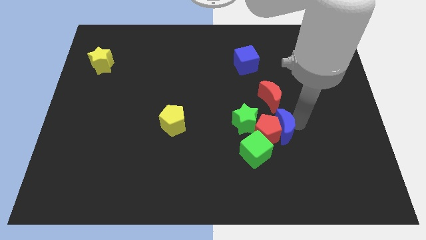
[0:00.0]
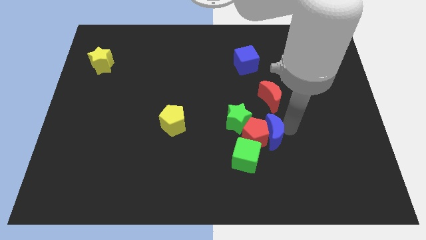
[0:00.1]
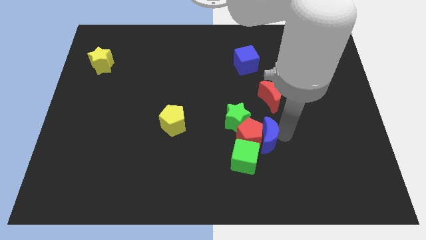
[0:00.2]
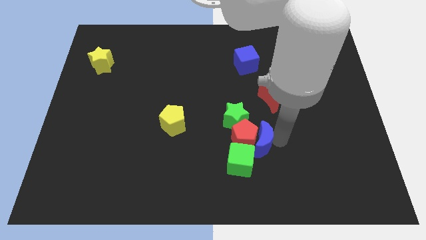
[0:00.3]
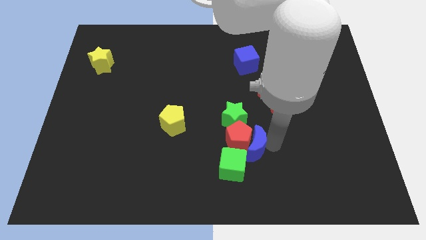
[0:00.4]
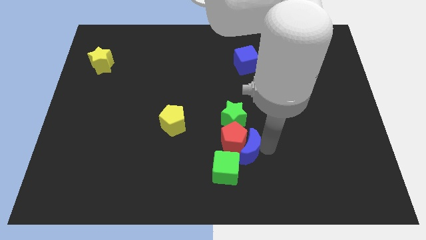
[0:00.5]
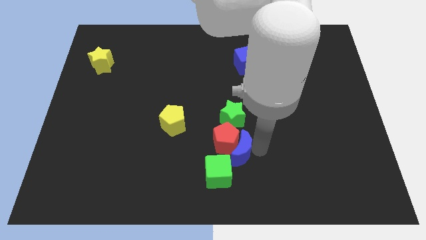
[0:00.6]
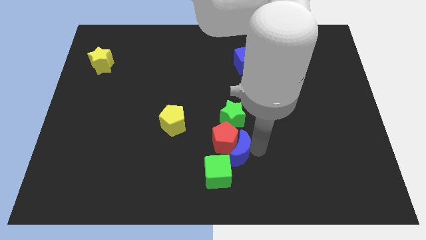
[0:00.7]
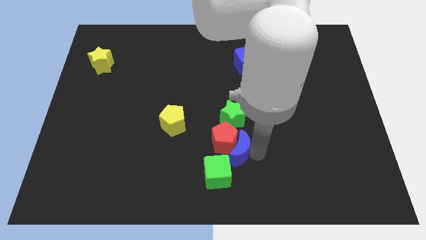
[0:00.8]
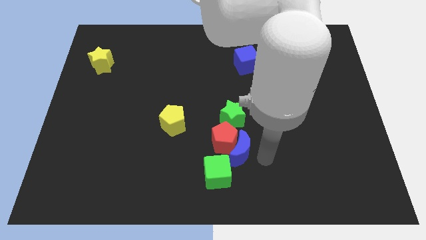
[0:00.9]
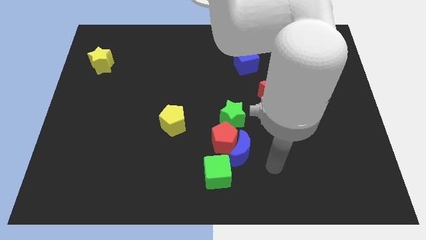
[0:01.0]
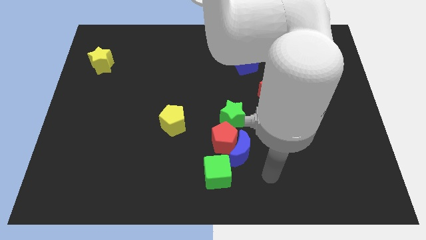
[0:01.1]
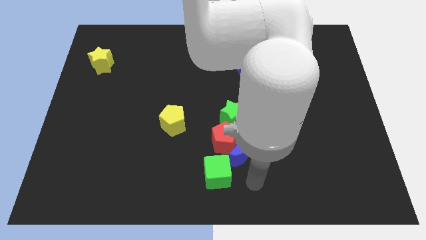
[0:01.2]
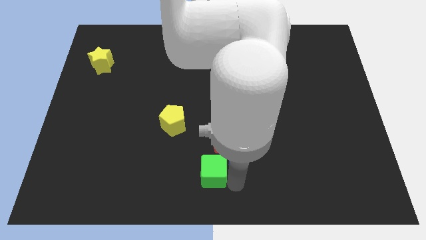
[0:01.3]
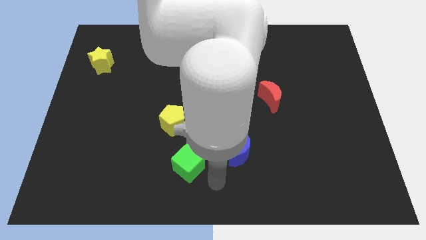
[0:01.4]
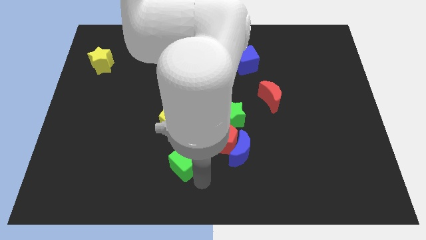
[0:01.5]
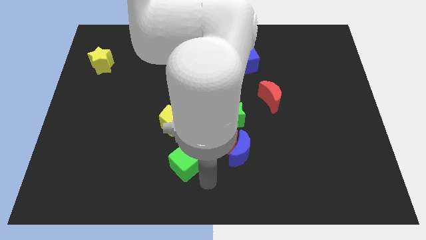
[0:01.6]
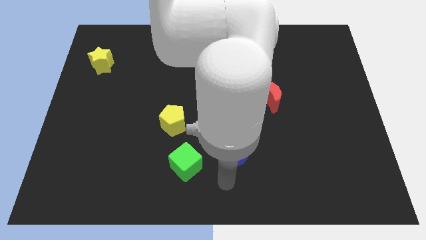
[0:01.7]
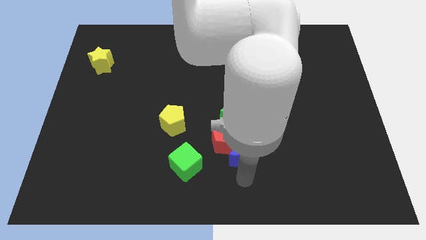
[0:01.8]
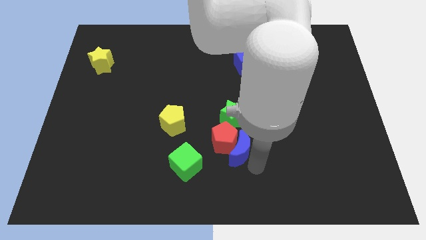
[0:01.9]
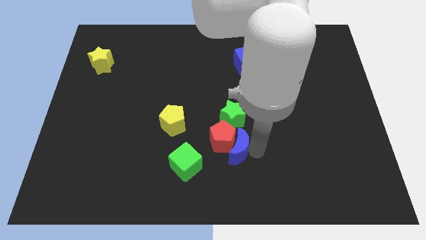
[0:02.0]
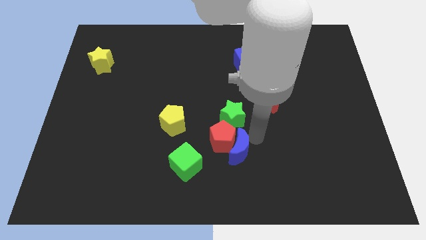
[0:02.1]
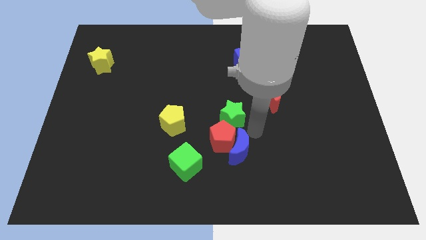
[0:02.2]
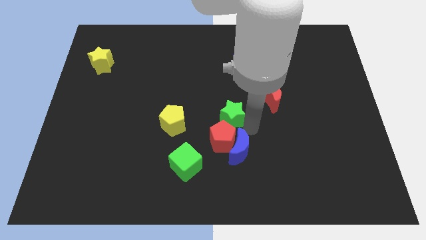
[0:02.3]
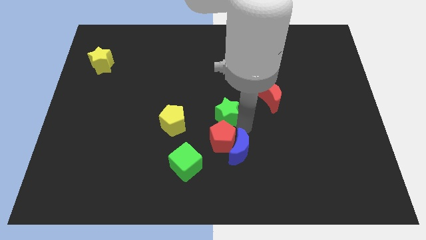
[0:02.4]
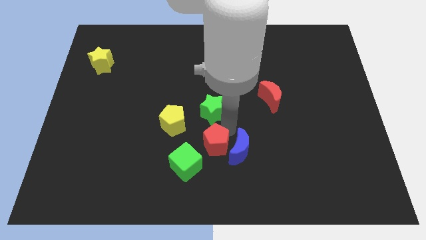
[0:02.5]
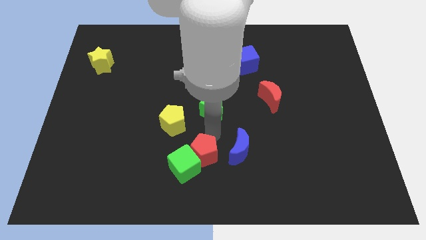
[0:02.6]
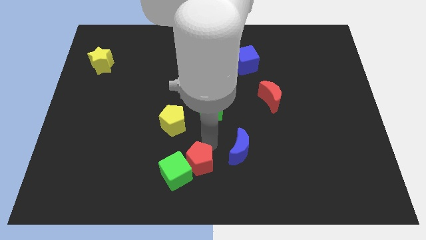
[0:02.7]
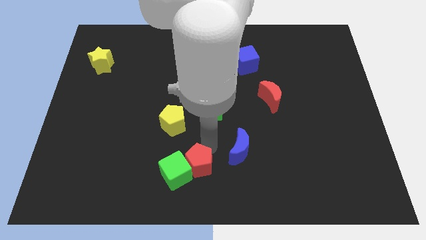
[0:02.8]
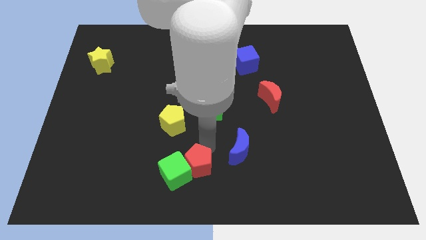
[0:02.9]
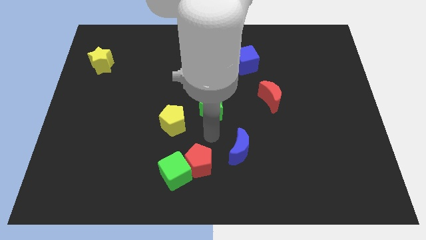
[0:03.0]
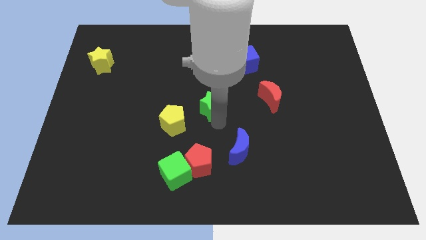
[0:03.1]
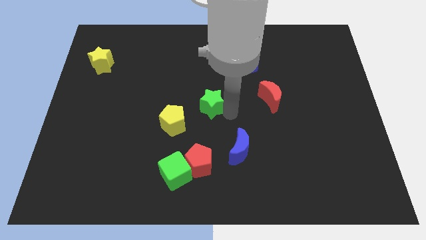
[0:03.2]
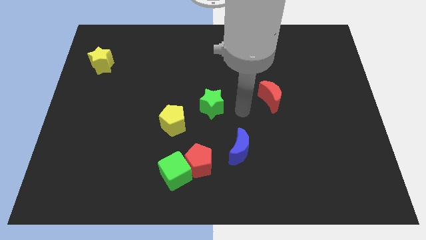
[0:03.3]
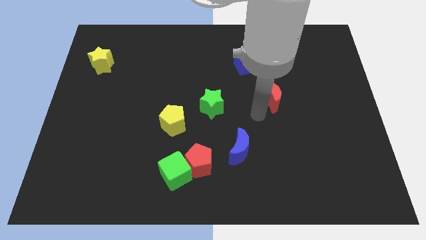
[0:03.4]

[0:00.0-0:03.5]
push the red pentagon into the green cube

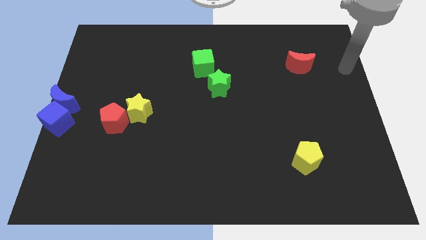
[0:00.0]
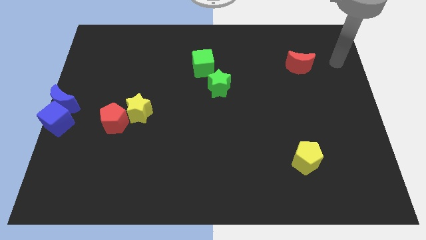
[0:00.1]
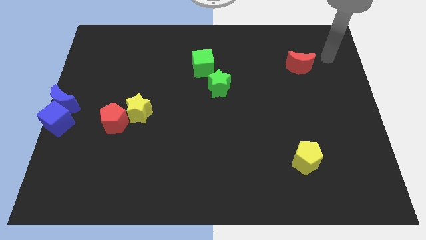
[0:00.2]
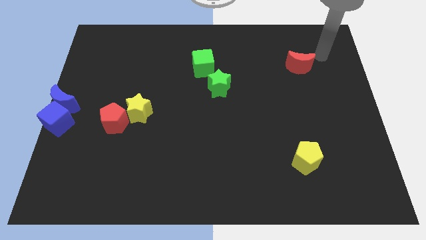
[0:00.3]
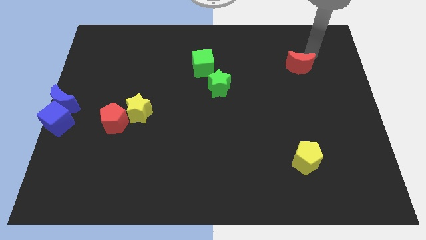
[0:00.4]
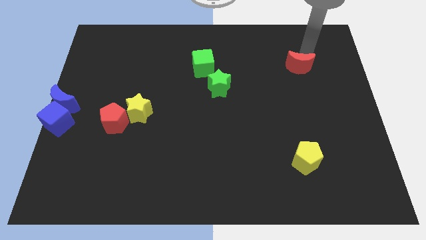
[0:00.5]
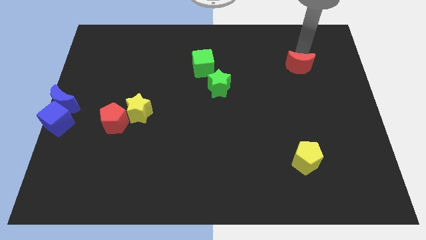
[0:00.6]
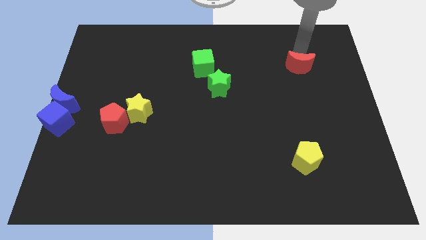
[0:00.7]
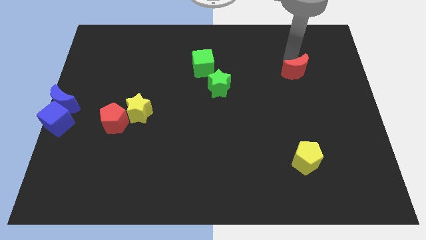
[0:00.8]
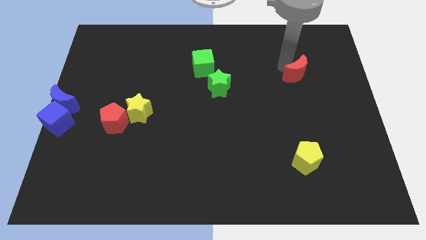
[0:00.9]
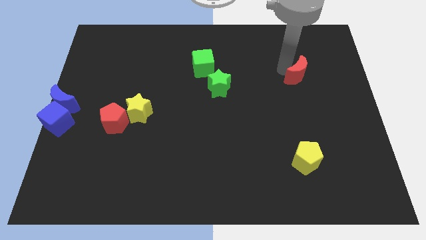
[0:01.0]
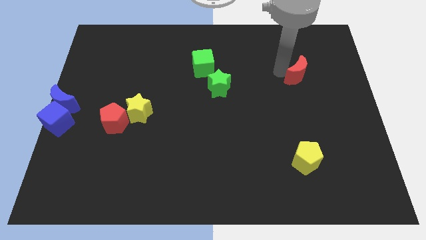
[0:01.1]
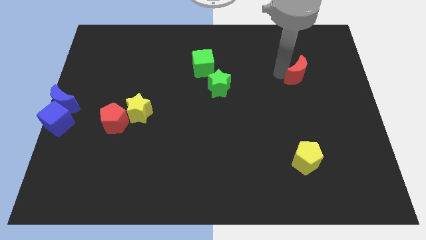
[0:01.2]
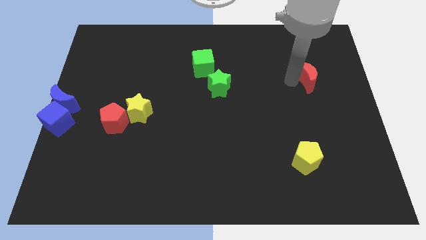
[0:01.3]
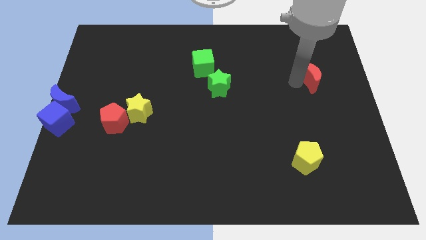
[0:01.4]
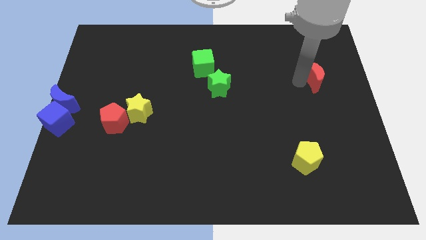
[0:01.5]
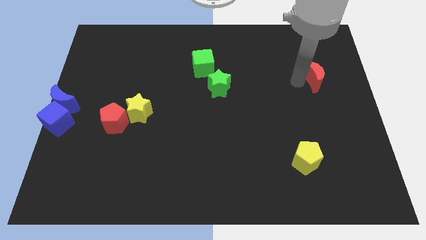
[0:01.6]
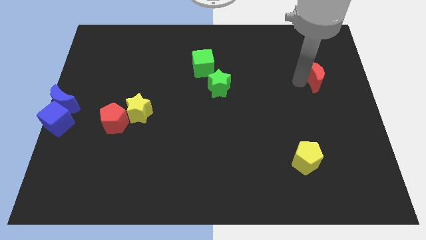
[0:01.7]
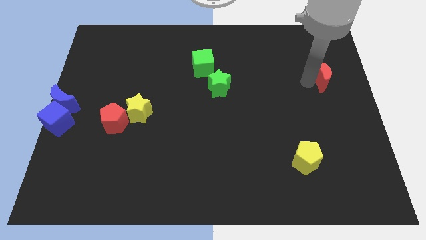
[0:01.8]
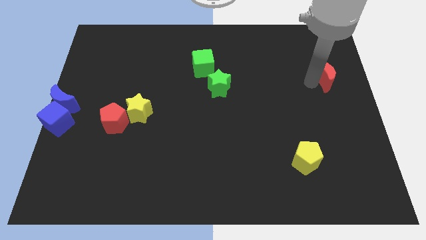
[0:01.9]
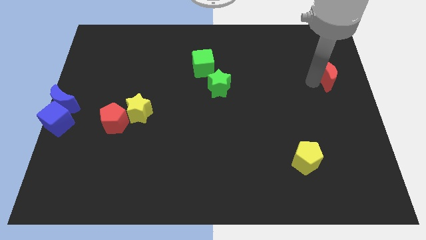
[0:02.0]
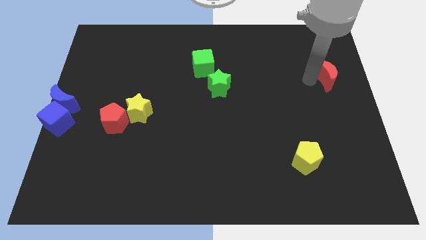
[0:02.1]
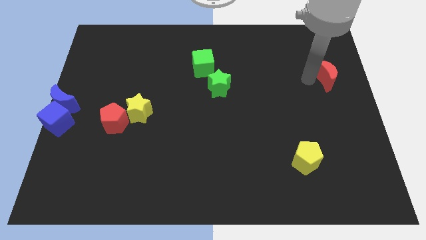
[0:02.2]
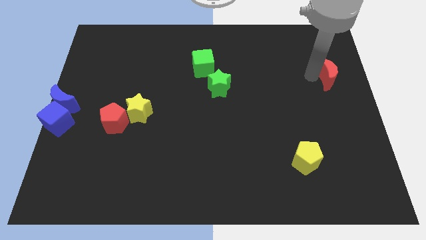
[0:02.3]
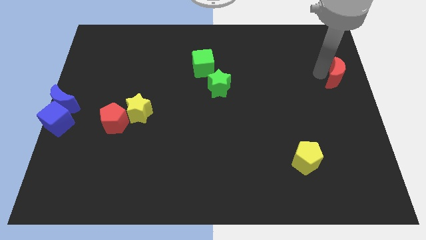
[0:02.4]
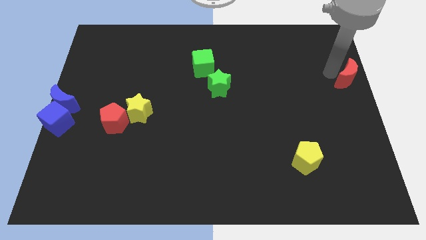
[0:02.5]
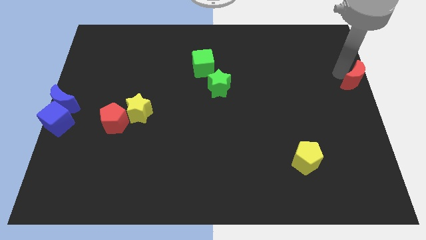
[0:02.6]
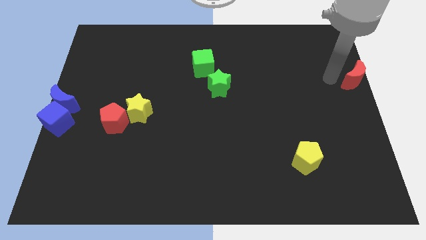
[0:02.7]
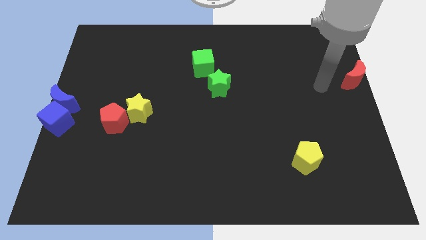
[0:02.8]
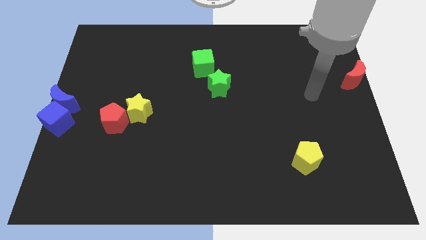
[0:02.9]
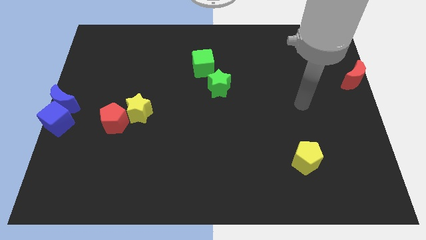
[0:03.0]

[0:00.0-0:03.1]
move the red moon diagonal to the yellow pentagon

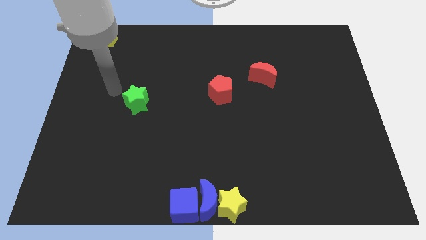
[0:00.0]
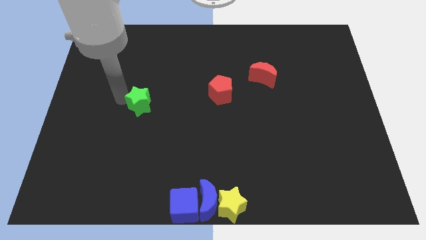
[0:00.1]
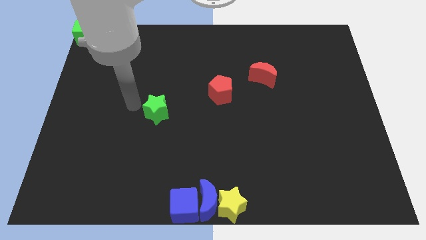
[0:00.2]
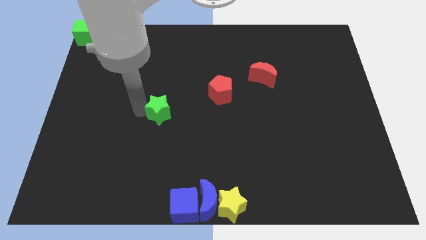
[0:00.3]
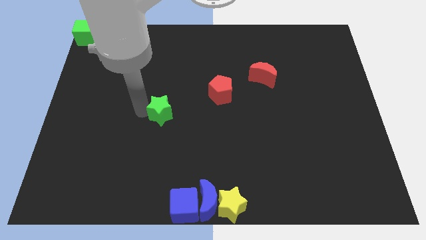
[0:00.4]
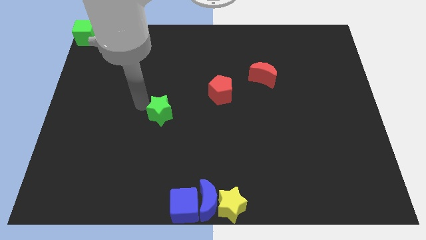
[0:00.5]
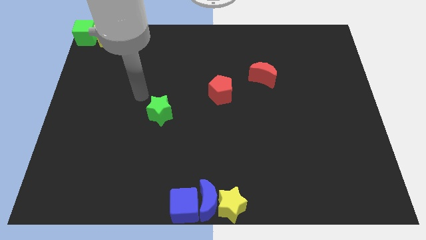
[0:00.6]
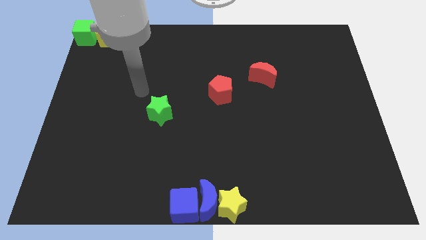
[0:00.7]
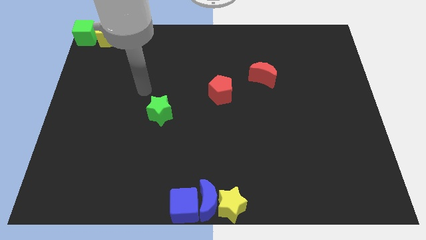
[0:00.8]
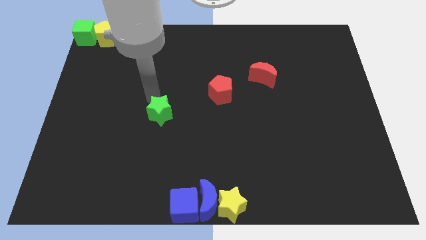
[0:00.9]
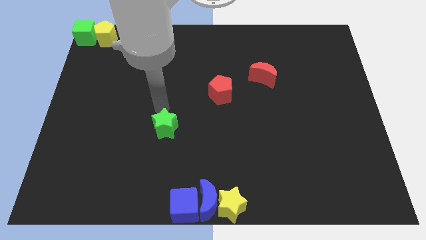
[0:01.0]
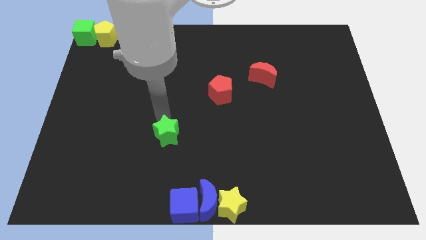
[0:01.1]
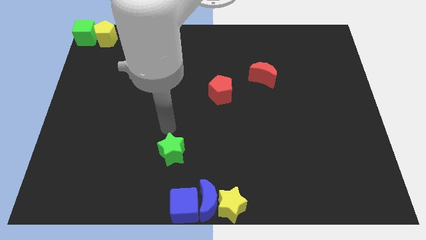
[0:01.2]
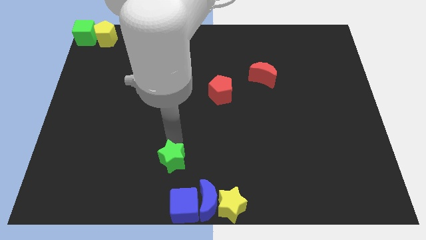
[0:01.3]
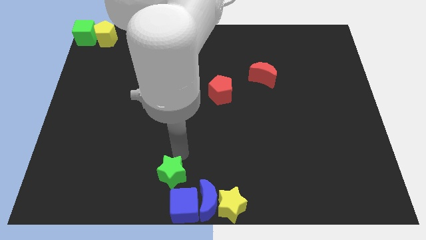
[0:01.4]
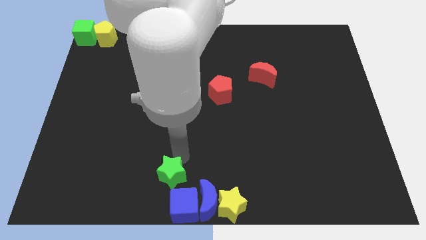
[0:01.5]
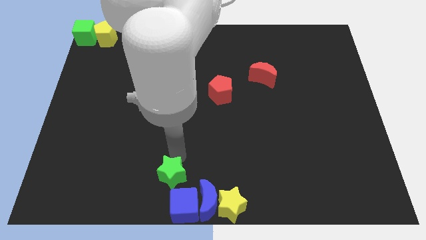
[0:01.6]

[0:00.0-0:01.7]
move the green star towards the blue cube

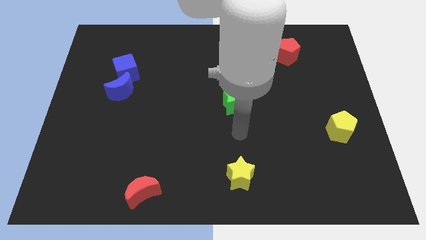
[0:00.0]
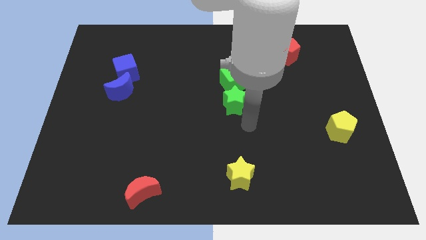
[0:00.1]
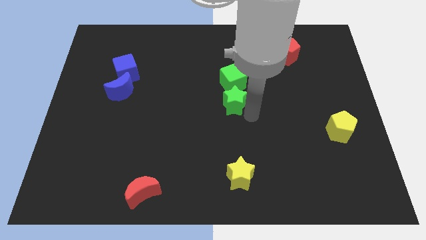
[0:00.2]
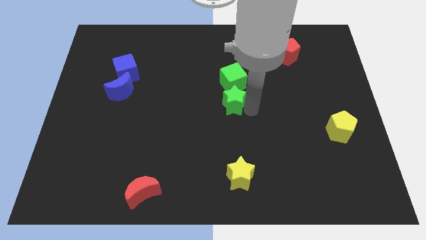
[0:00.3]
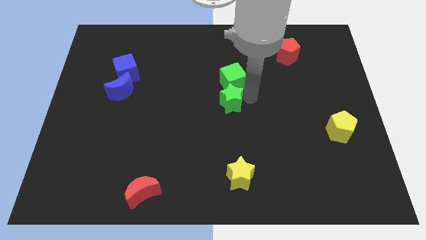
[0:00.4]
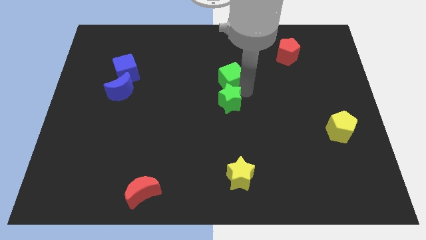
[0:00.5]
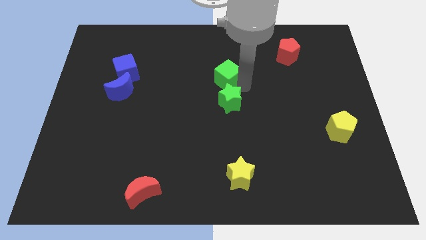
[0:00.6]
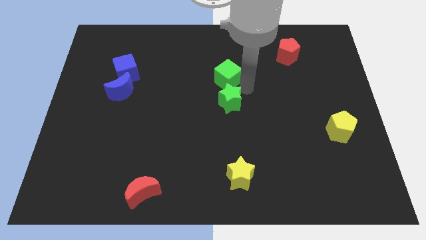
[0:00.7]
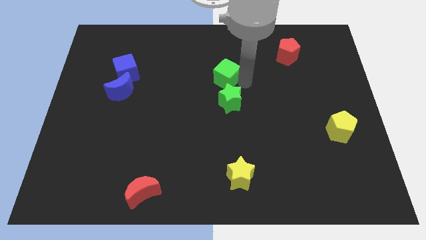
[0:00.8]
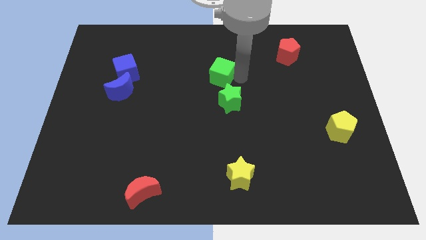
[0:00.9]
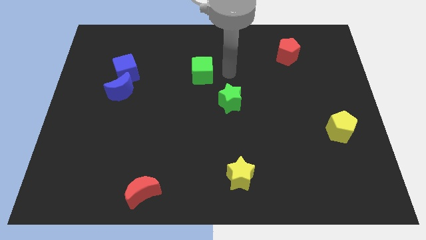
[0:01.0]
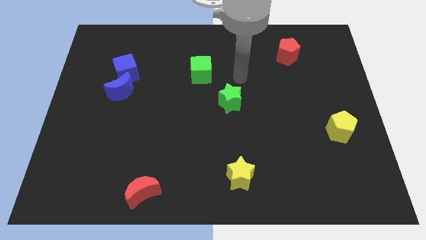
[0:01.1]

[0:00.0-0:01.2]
separate green cube from green star
